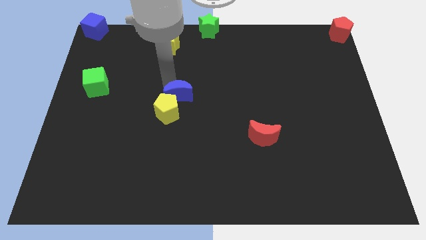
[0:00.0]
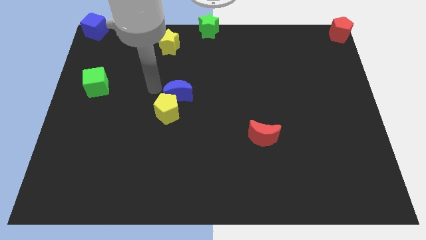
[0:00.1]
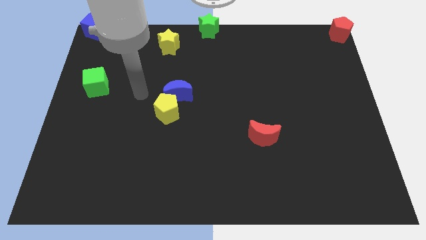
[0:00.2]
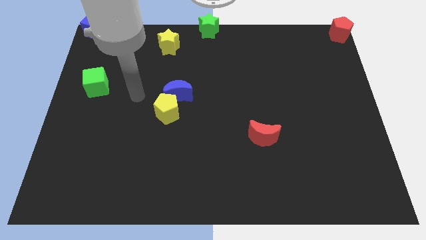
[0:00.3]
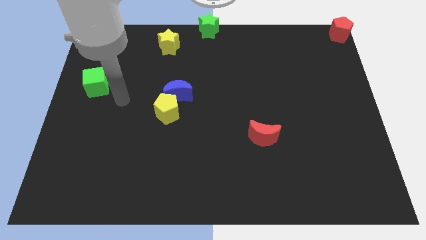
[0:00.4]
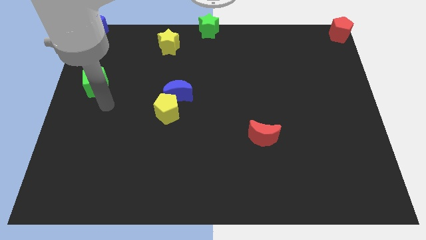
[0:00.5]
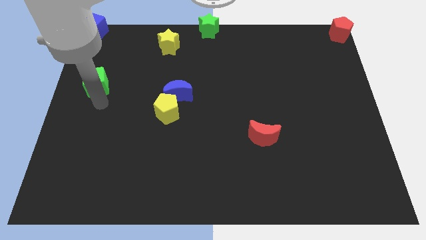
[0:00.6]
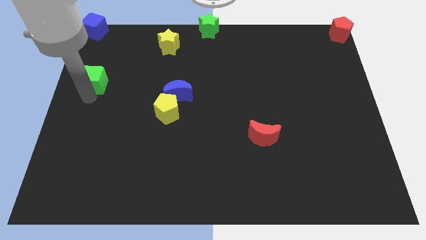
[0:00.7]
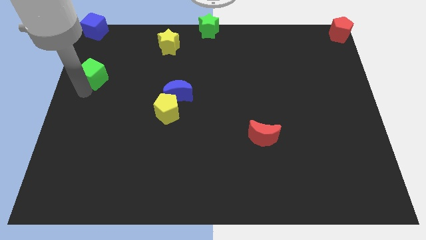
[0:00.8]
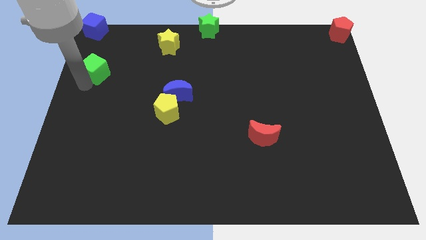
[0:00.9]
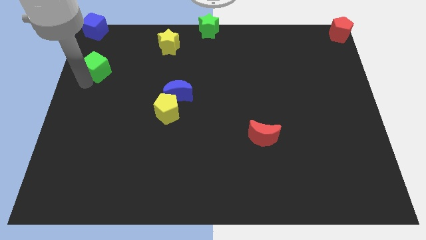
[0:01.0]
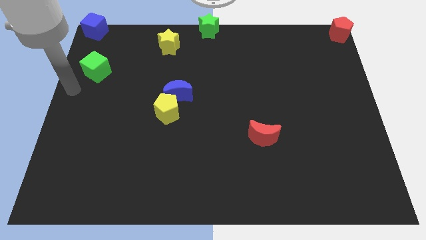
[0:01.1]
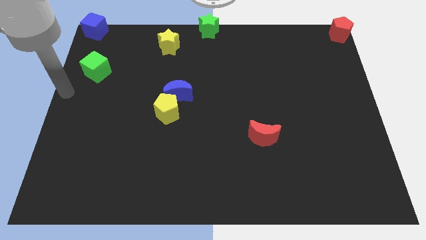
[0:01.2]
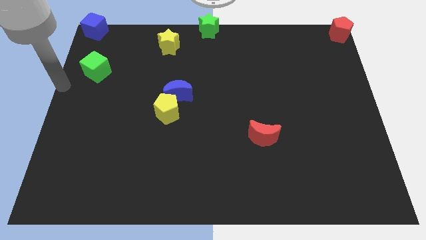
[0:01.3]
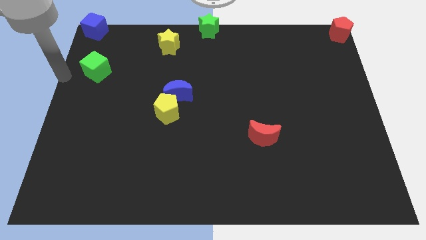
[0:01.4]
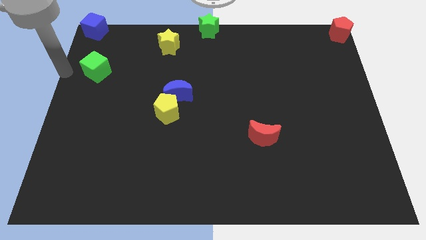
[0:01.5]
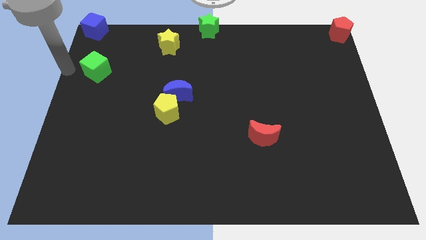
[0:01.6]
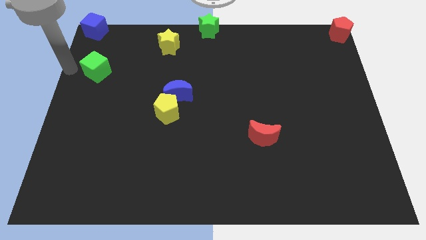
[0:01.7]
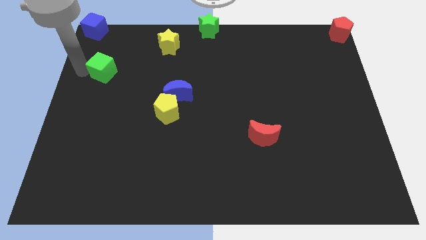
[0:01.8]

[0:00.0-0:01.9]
push the green cube to the top left of the board

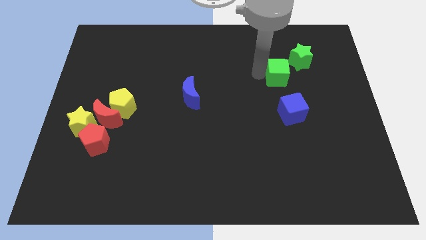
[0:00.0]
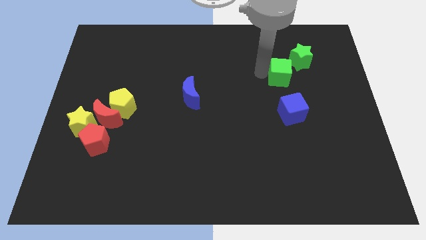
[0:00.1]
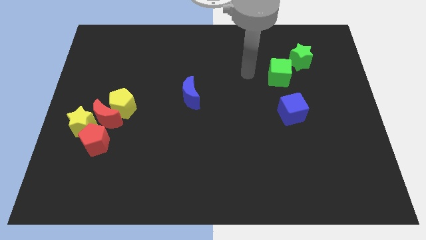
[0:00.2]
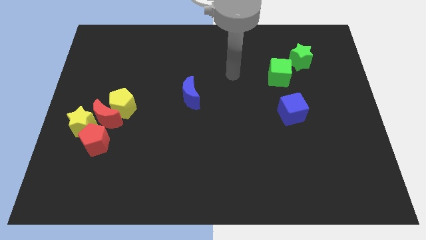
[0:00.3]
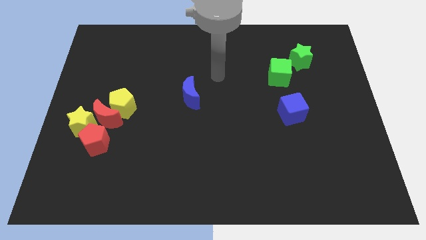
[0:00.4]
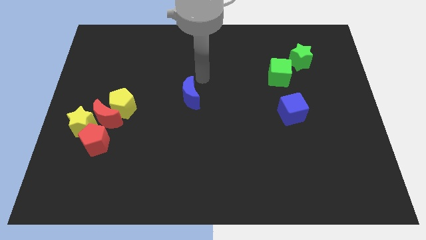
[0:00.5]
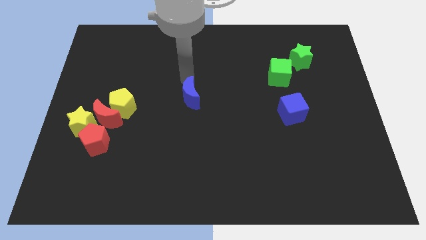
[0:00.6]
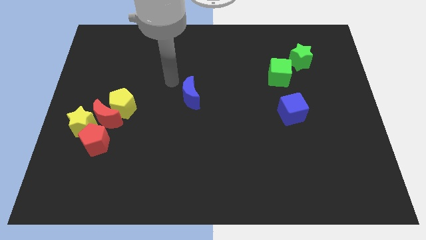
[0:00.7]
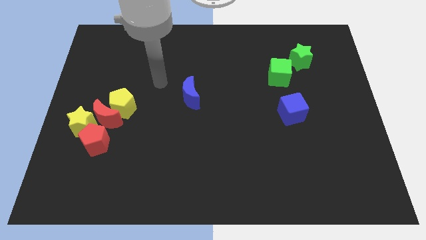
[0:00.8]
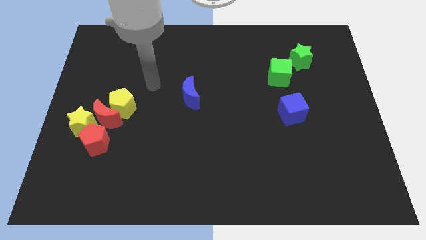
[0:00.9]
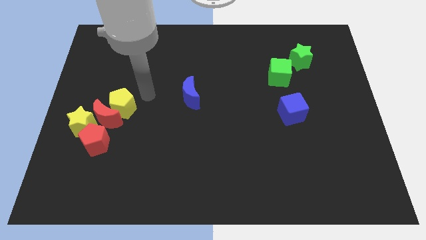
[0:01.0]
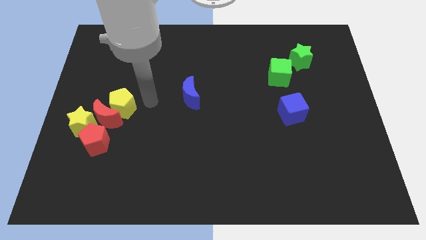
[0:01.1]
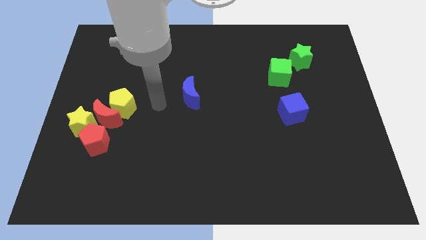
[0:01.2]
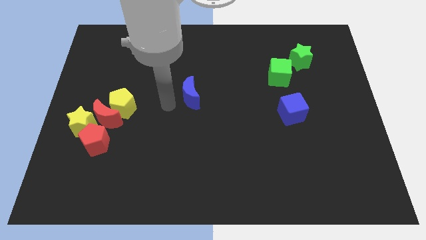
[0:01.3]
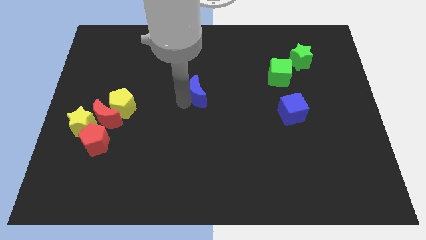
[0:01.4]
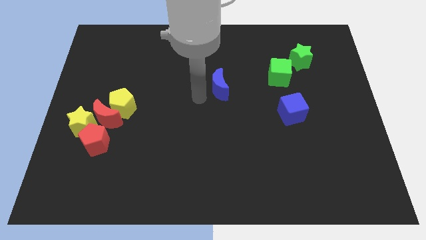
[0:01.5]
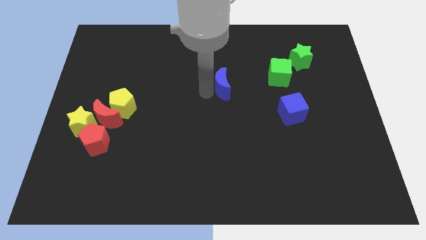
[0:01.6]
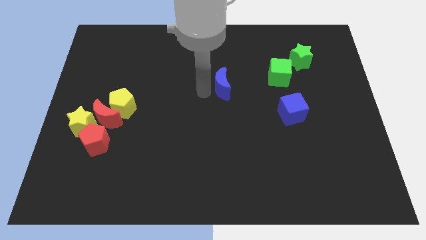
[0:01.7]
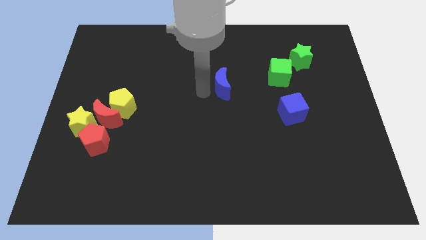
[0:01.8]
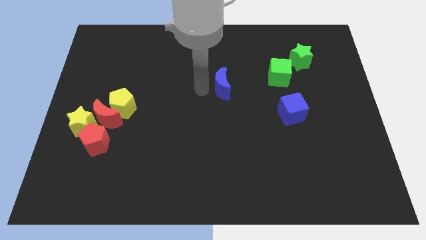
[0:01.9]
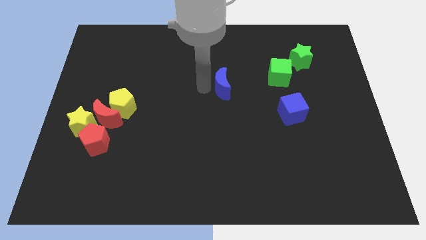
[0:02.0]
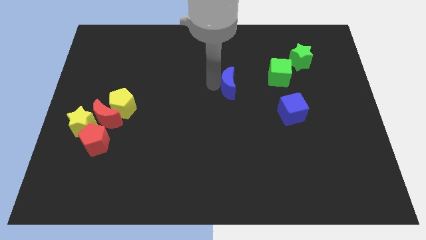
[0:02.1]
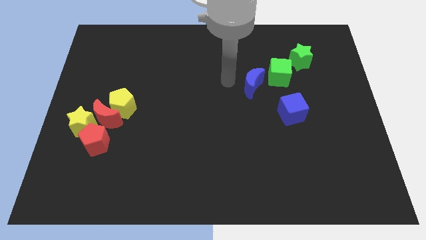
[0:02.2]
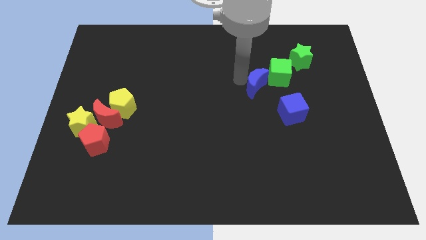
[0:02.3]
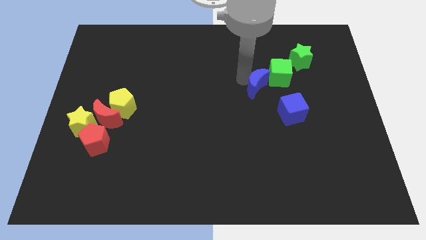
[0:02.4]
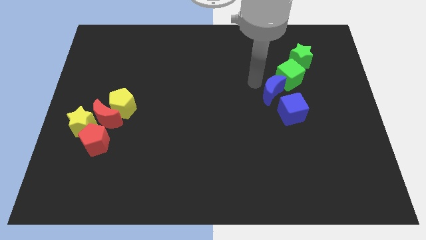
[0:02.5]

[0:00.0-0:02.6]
place the blue moon left to the green cube

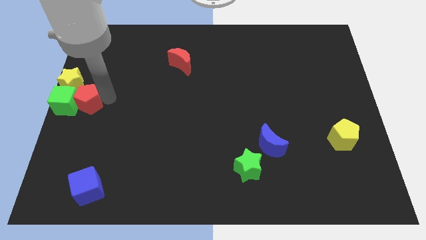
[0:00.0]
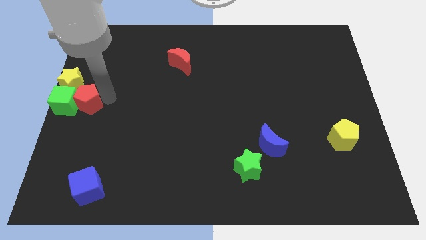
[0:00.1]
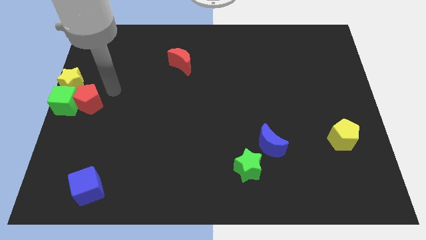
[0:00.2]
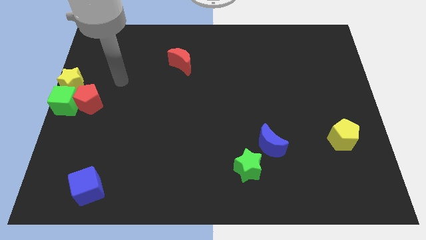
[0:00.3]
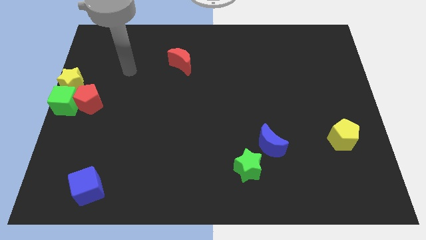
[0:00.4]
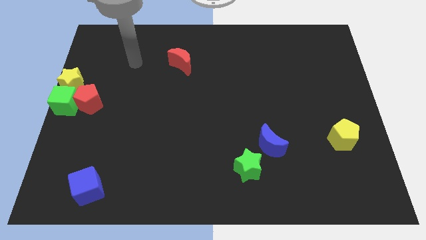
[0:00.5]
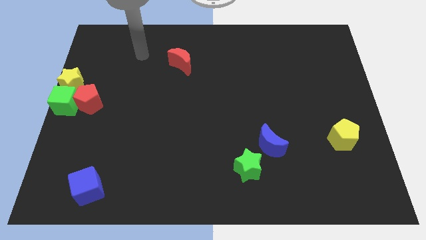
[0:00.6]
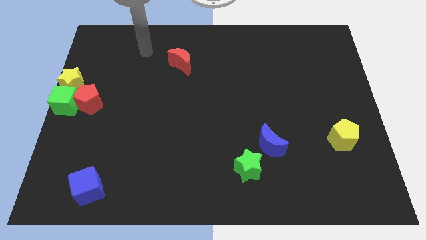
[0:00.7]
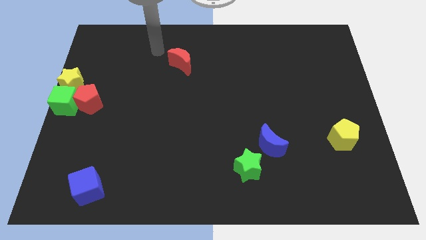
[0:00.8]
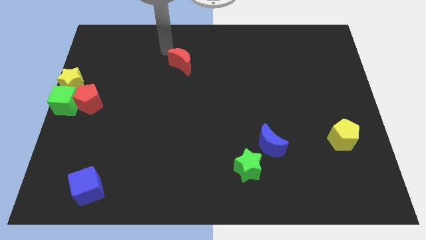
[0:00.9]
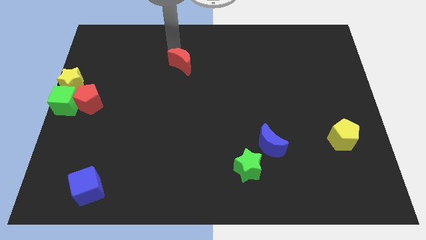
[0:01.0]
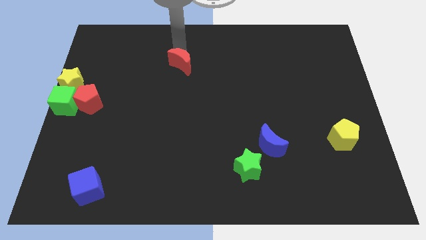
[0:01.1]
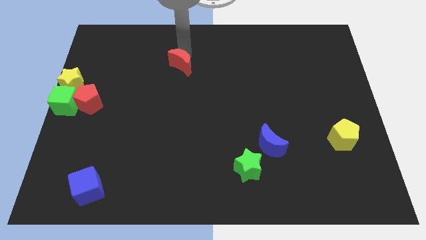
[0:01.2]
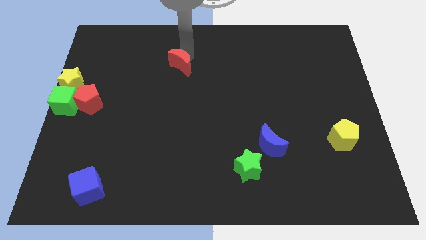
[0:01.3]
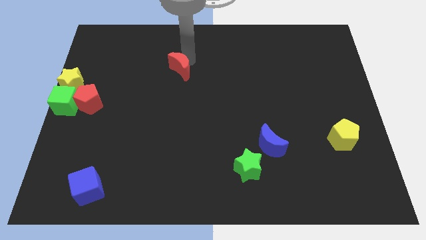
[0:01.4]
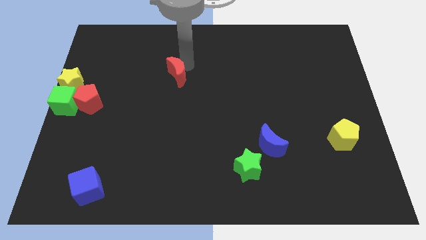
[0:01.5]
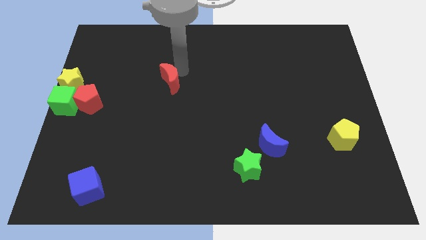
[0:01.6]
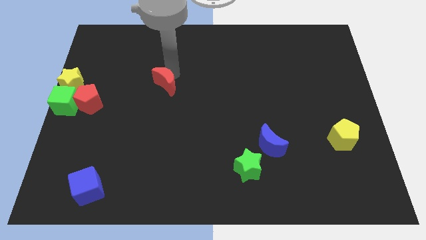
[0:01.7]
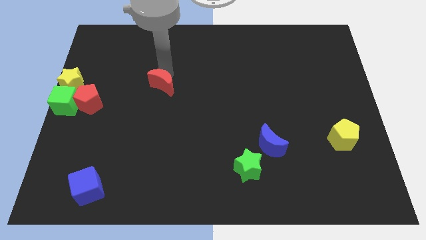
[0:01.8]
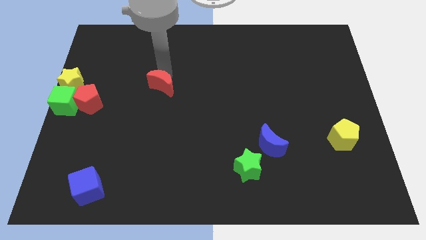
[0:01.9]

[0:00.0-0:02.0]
move the red crescent slightly down

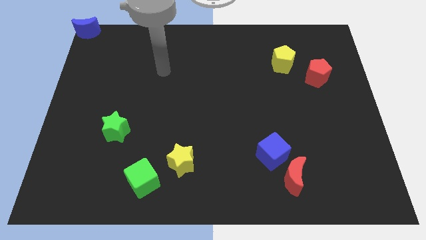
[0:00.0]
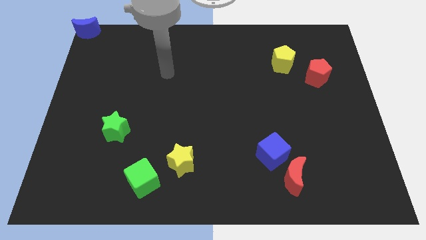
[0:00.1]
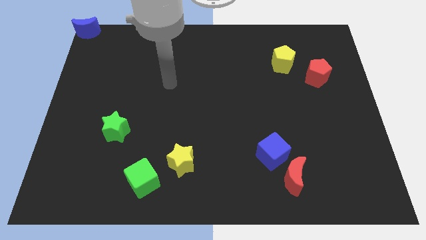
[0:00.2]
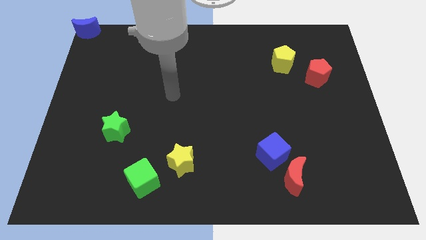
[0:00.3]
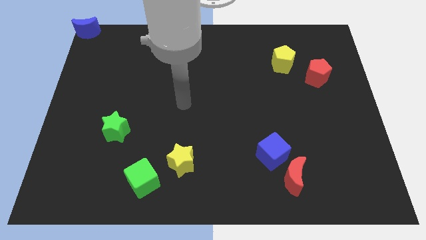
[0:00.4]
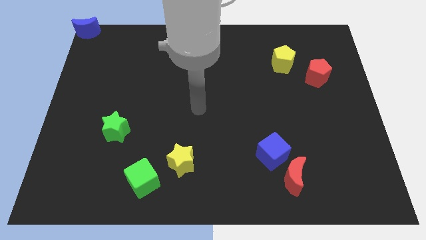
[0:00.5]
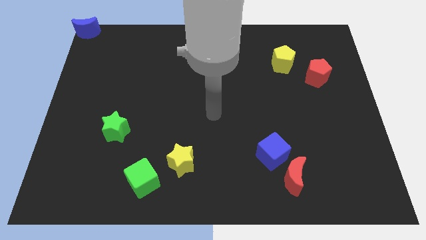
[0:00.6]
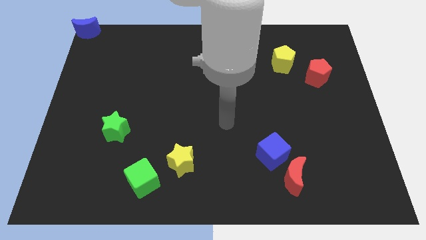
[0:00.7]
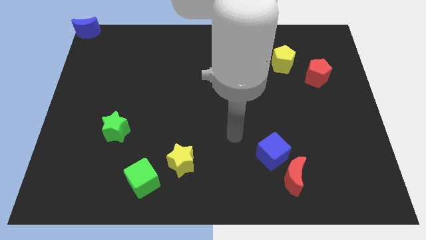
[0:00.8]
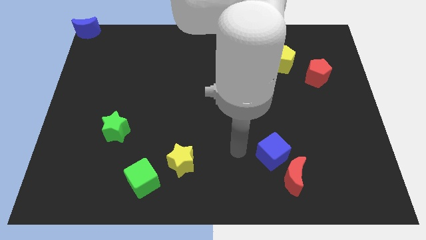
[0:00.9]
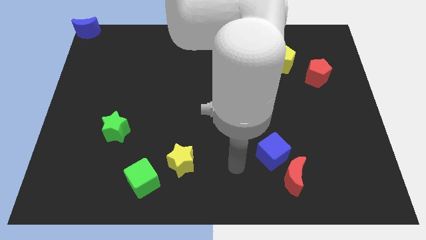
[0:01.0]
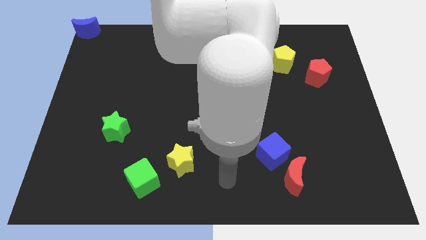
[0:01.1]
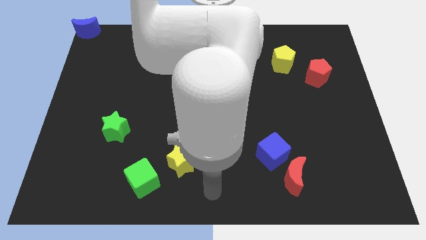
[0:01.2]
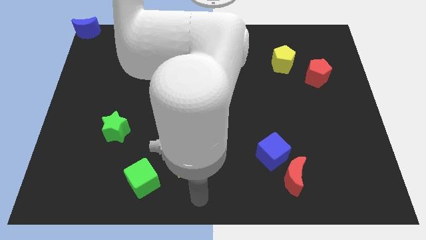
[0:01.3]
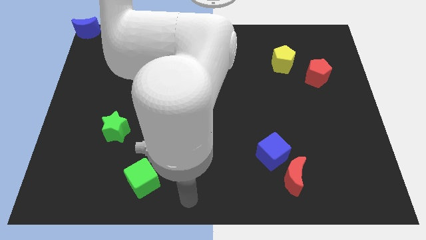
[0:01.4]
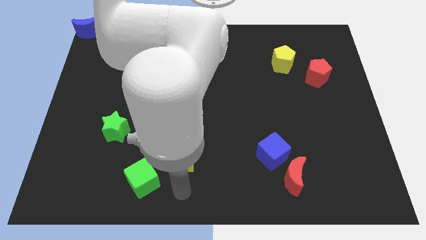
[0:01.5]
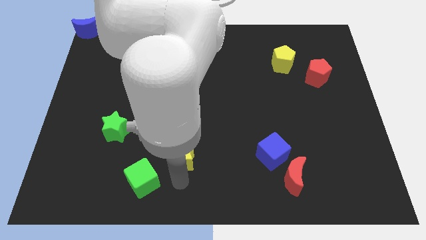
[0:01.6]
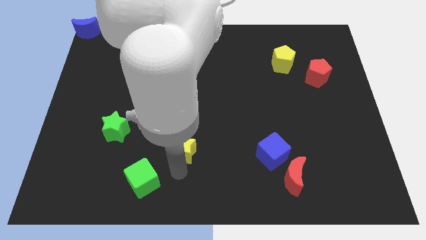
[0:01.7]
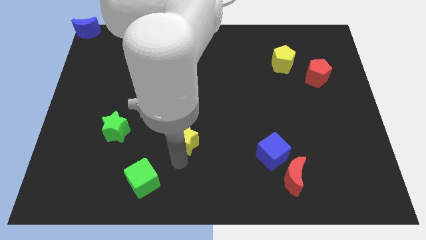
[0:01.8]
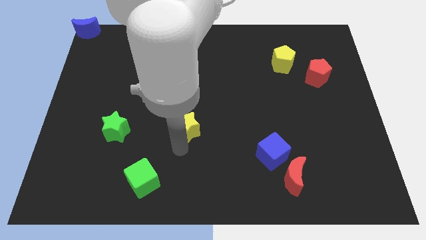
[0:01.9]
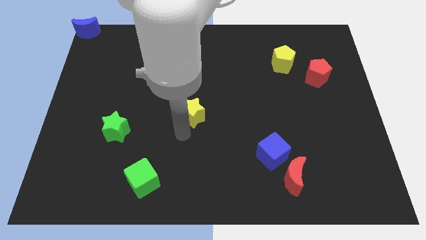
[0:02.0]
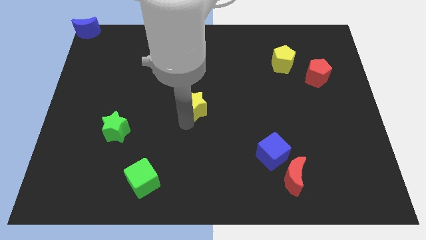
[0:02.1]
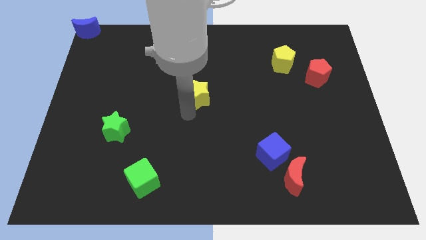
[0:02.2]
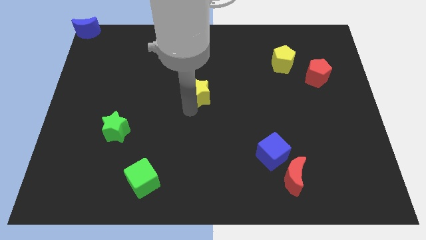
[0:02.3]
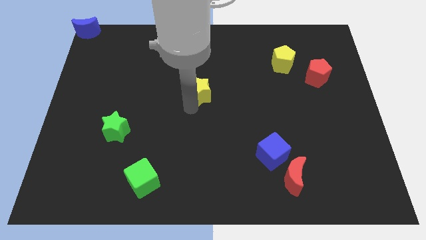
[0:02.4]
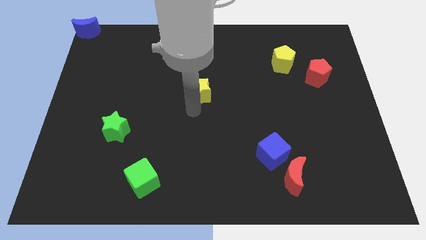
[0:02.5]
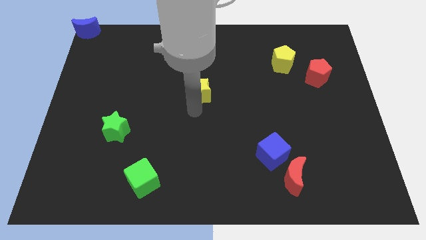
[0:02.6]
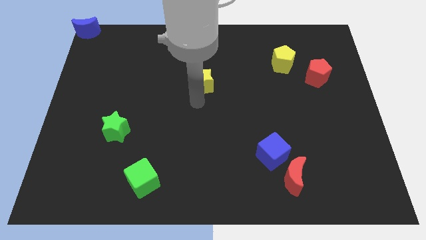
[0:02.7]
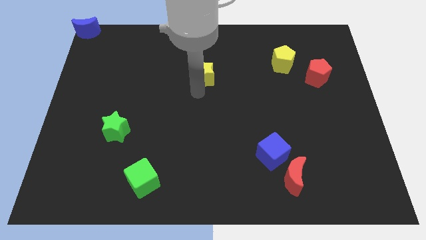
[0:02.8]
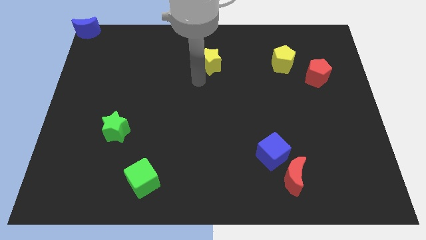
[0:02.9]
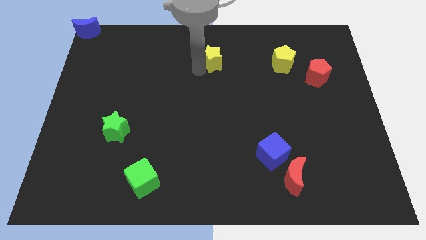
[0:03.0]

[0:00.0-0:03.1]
move yellow star to the left of yellow pentagon
